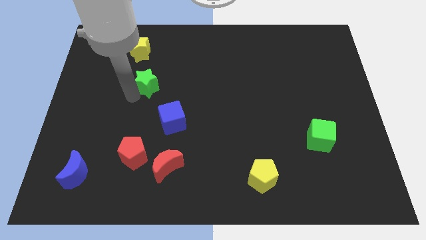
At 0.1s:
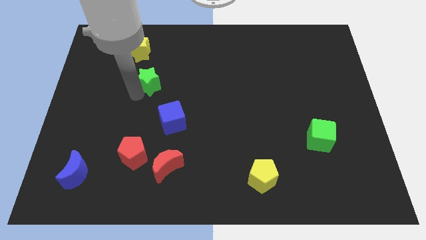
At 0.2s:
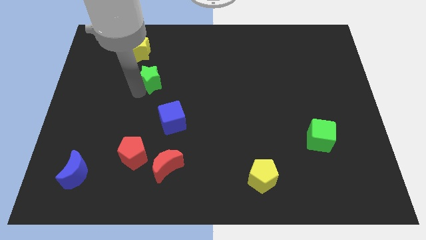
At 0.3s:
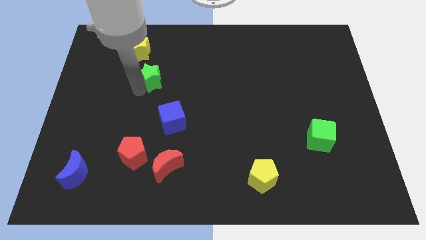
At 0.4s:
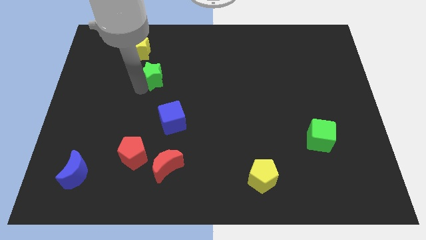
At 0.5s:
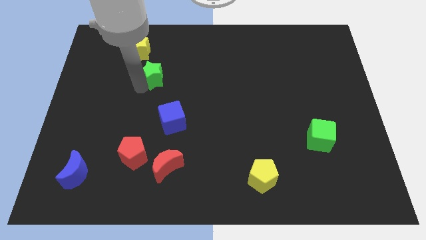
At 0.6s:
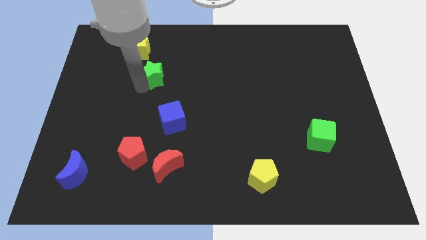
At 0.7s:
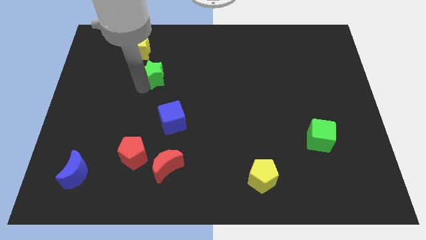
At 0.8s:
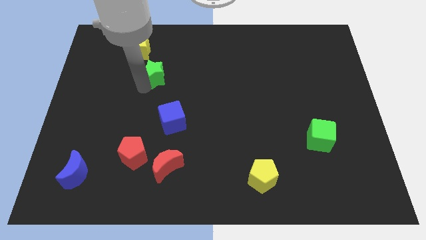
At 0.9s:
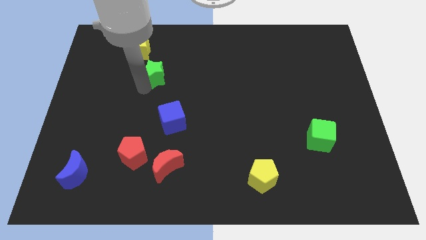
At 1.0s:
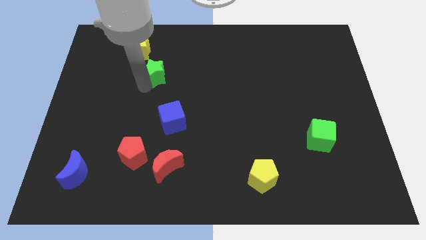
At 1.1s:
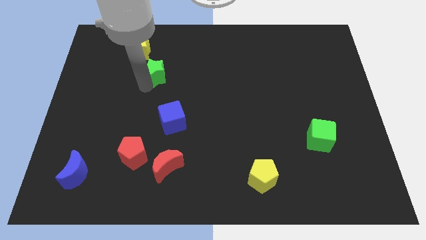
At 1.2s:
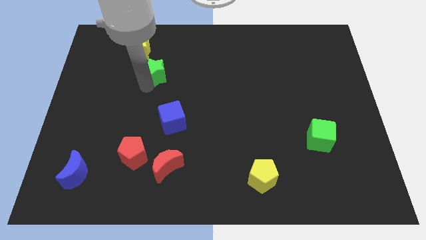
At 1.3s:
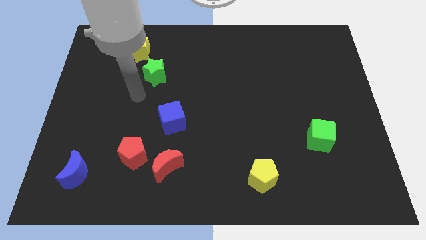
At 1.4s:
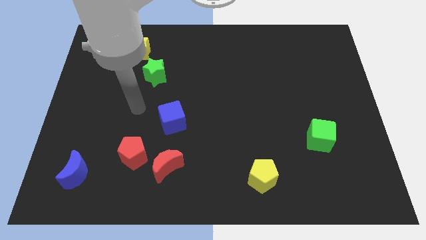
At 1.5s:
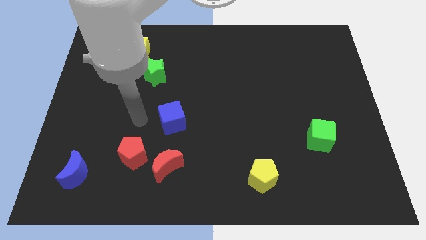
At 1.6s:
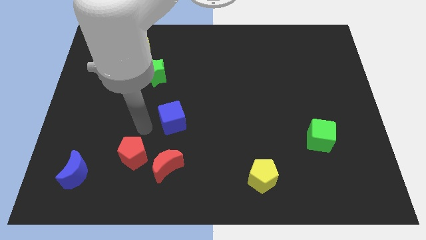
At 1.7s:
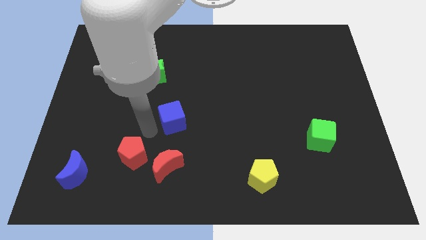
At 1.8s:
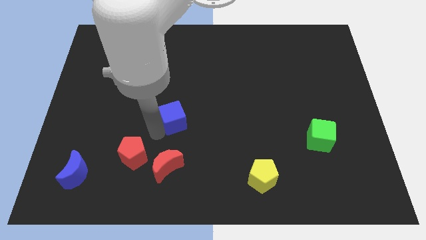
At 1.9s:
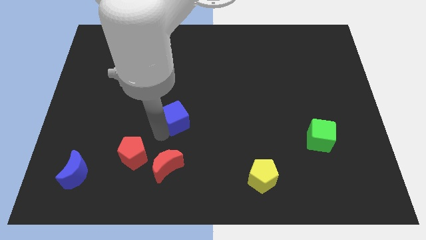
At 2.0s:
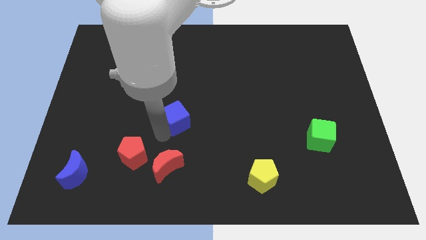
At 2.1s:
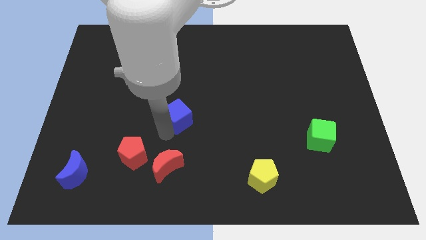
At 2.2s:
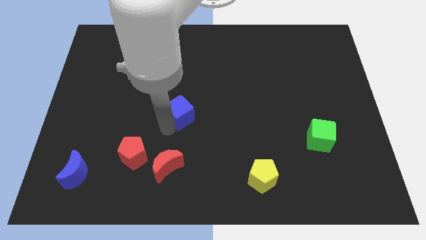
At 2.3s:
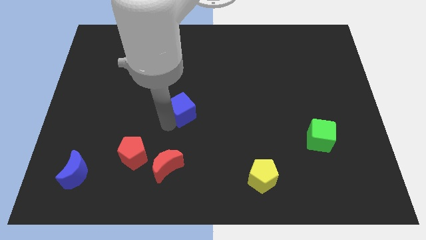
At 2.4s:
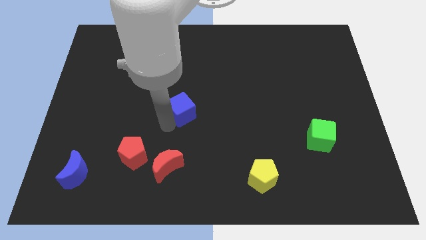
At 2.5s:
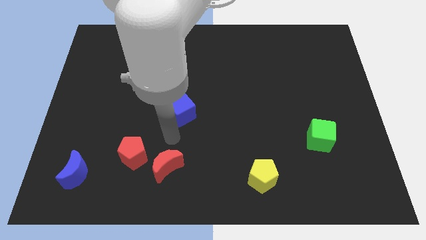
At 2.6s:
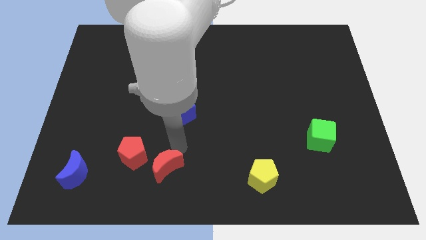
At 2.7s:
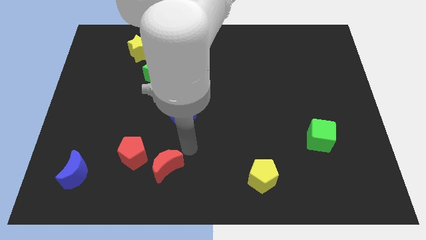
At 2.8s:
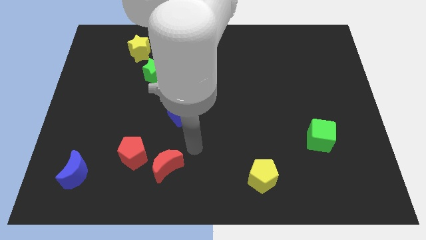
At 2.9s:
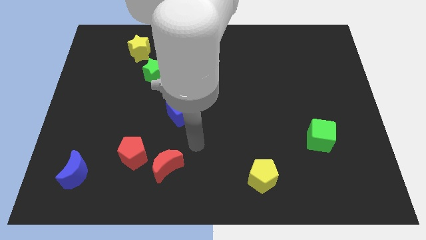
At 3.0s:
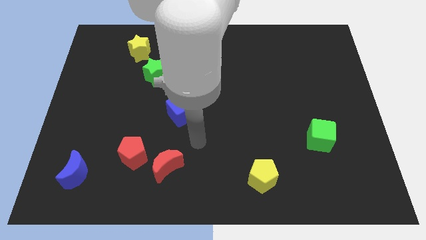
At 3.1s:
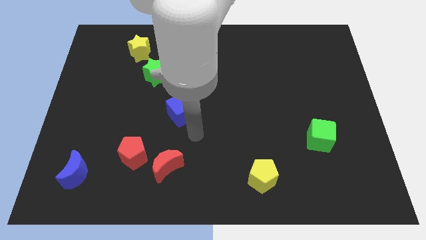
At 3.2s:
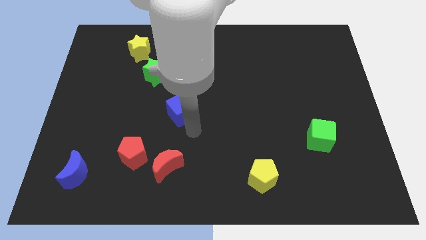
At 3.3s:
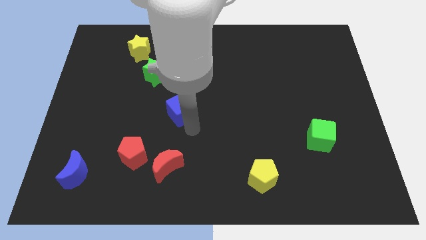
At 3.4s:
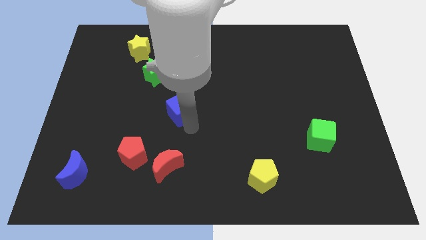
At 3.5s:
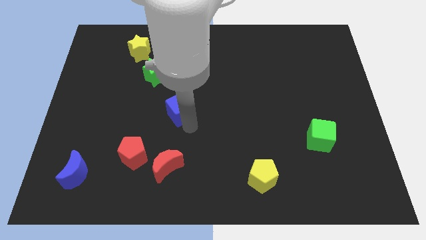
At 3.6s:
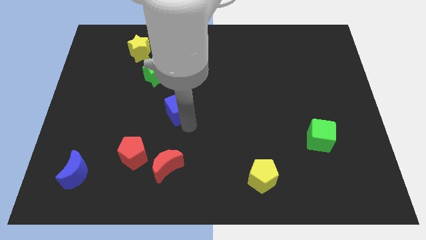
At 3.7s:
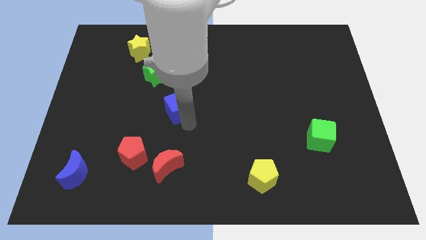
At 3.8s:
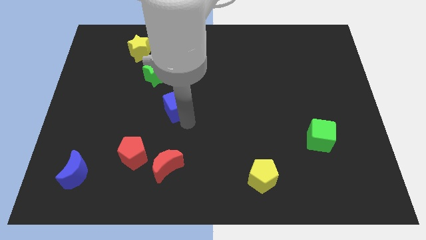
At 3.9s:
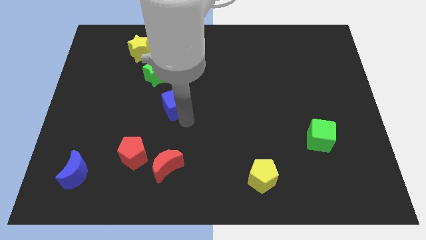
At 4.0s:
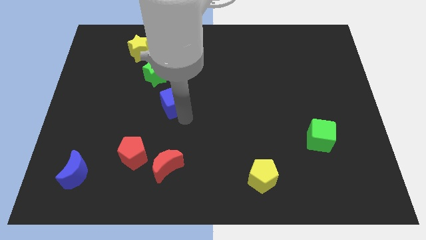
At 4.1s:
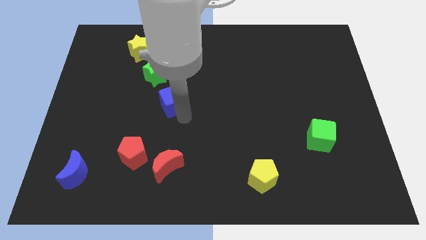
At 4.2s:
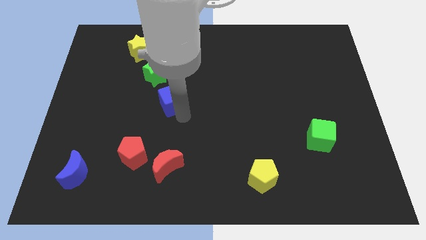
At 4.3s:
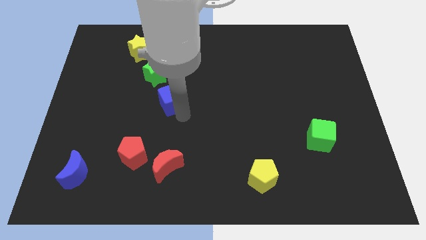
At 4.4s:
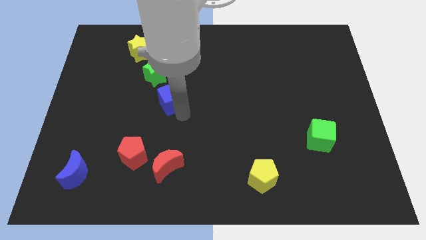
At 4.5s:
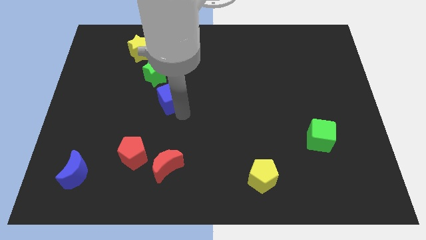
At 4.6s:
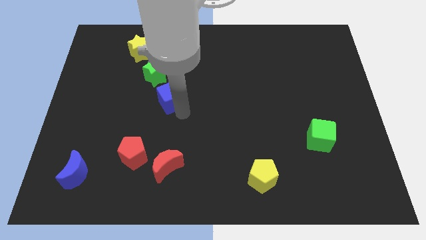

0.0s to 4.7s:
arrange the green star and blue cube in a diagonal line at the bottom right of the yellow star

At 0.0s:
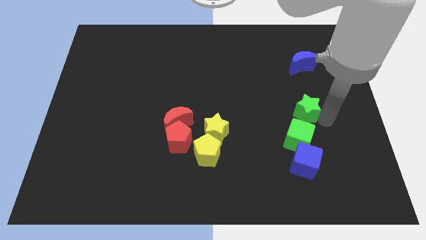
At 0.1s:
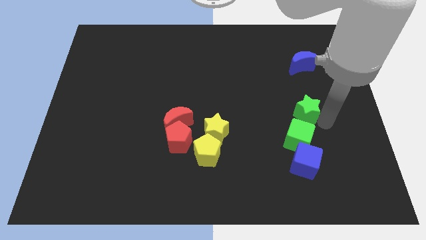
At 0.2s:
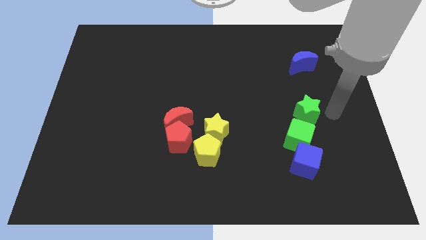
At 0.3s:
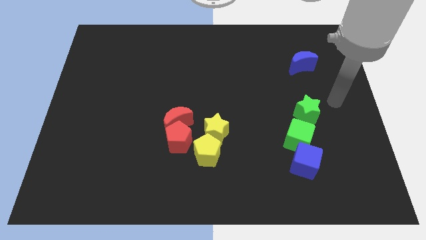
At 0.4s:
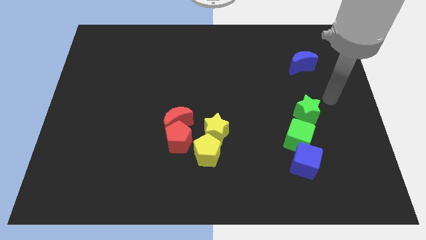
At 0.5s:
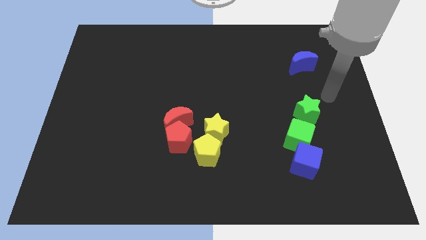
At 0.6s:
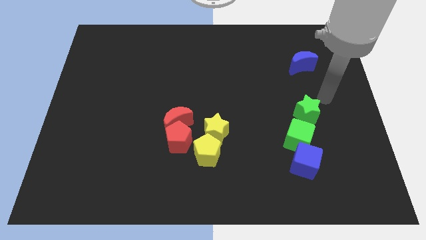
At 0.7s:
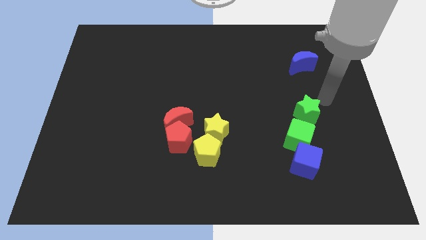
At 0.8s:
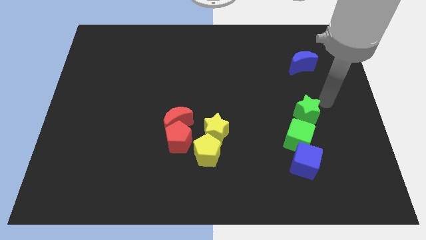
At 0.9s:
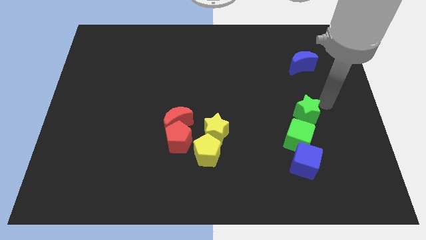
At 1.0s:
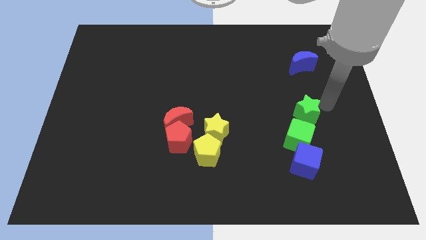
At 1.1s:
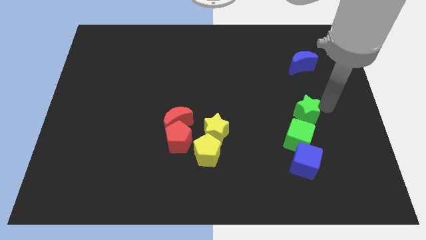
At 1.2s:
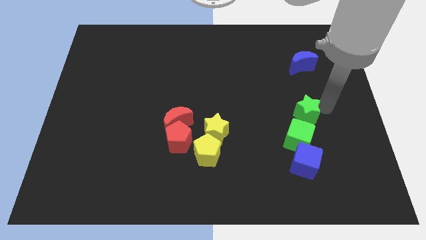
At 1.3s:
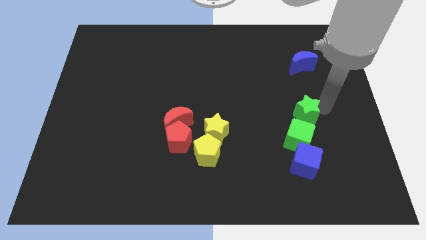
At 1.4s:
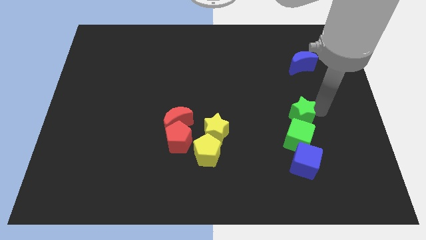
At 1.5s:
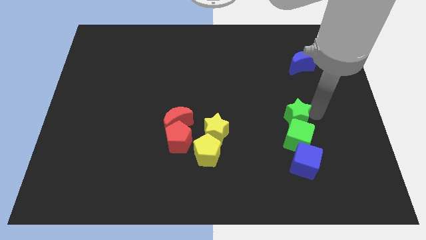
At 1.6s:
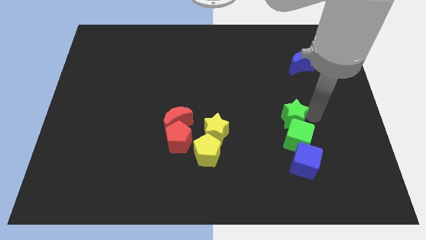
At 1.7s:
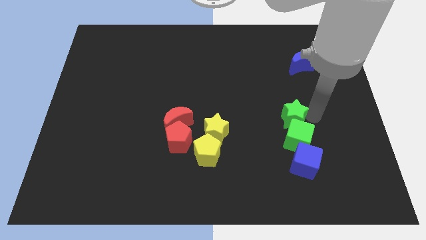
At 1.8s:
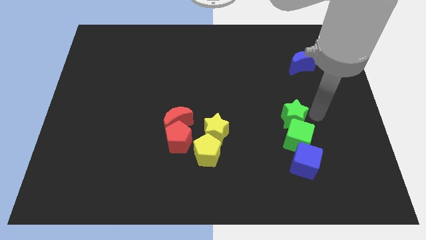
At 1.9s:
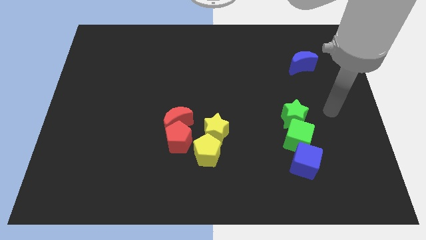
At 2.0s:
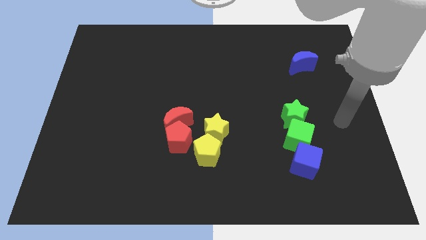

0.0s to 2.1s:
push the green star close to the green cube

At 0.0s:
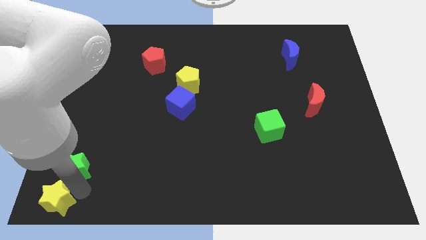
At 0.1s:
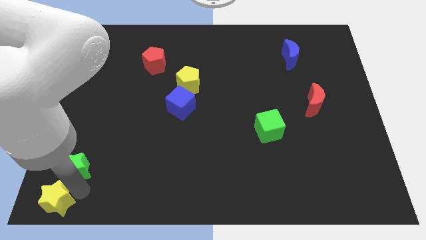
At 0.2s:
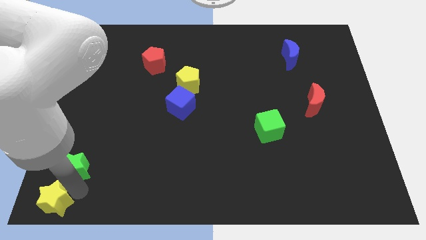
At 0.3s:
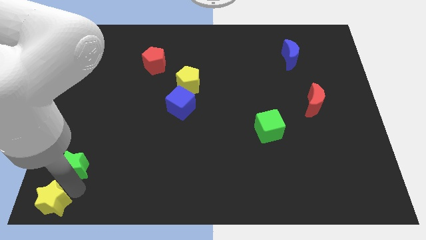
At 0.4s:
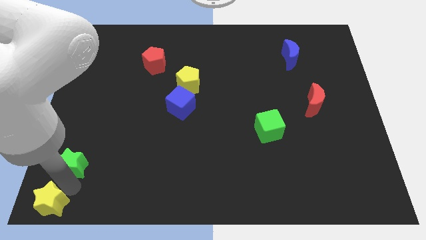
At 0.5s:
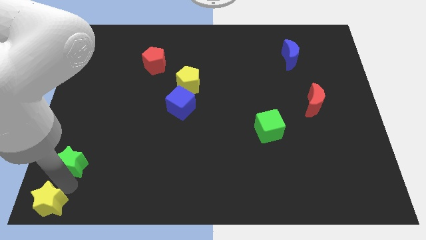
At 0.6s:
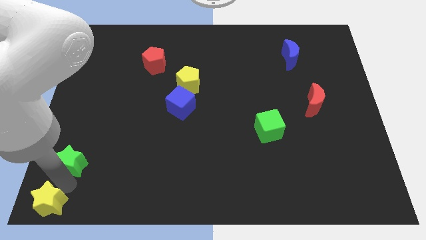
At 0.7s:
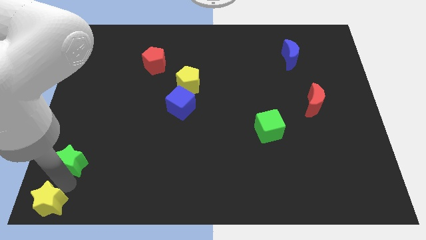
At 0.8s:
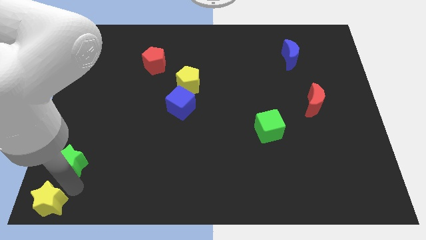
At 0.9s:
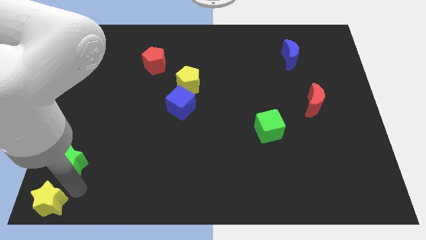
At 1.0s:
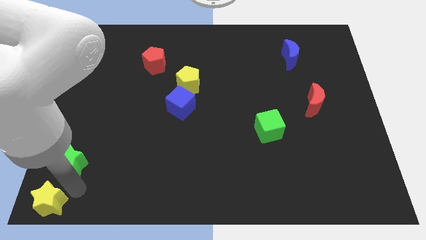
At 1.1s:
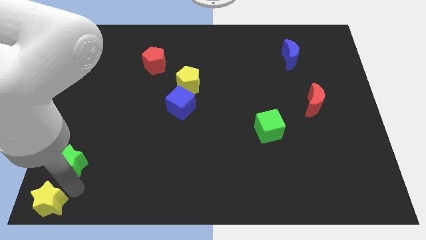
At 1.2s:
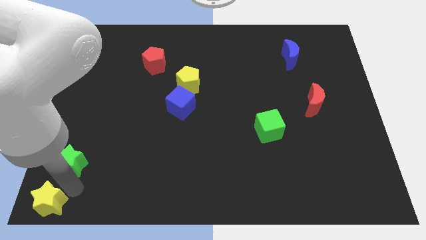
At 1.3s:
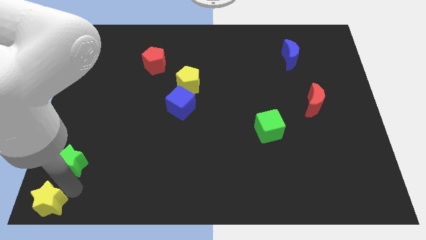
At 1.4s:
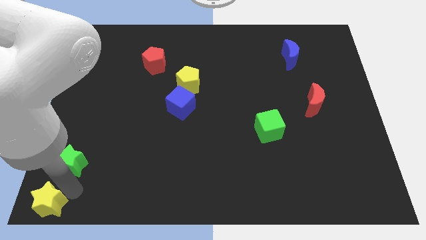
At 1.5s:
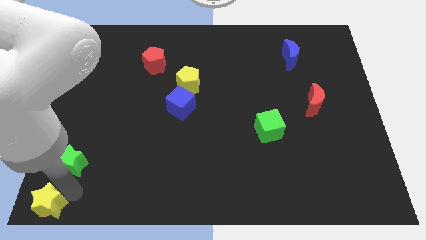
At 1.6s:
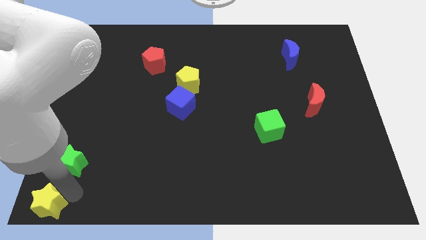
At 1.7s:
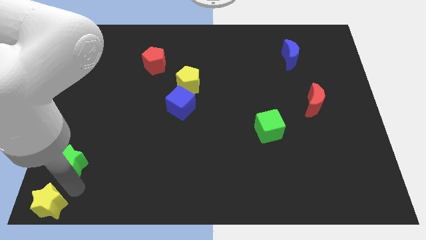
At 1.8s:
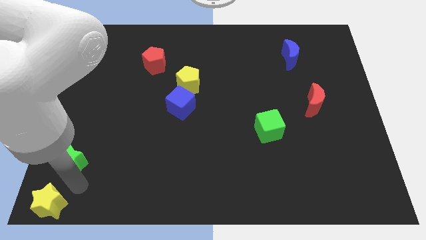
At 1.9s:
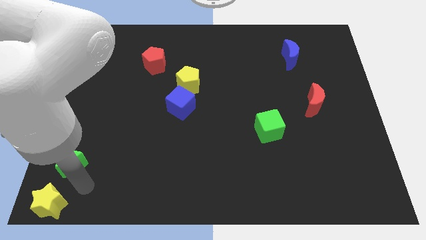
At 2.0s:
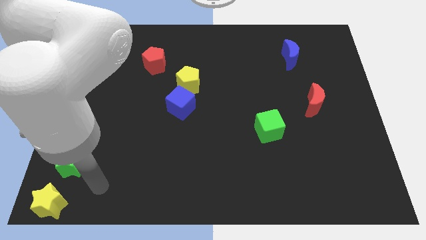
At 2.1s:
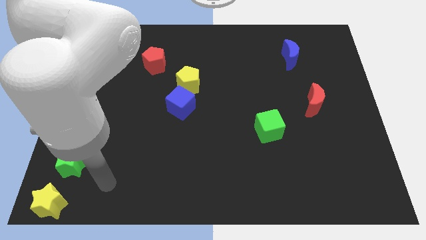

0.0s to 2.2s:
separate yellow and green stars

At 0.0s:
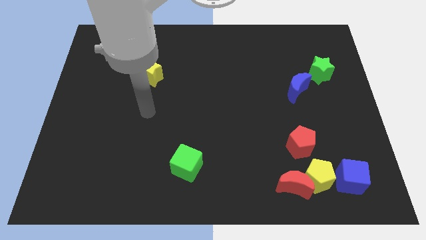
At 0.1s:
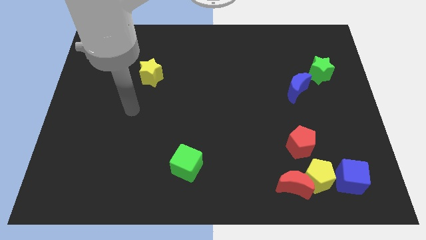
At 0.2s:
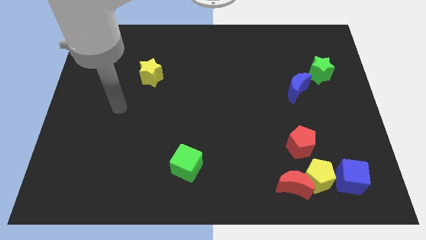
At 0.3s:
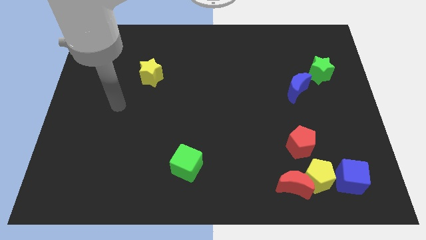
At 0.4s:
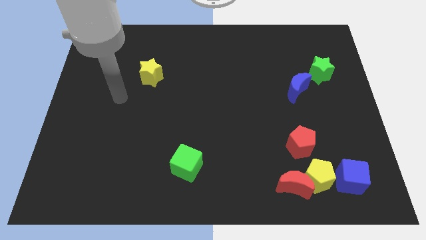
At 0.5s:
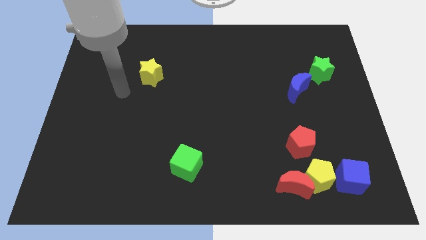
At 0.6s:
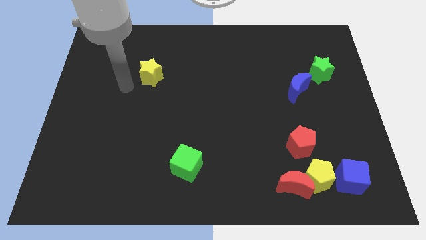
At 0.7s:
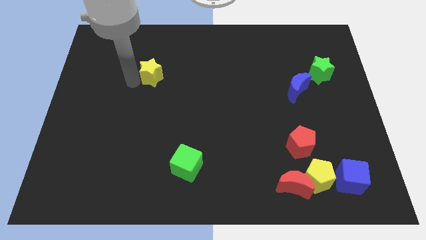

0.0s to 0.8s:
move arm close to yellow star
